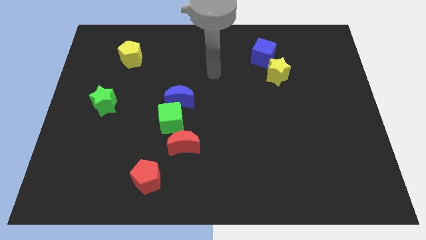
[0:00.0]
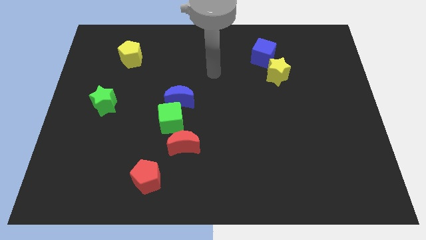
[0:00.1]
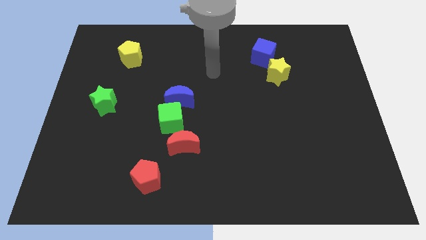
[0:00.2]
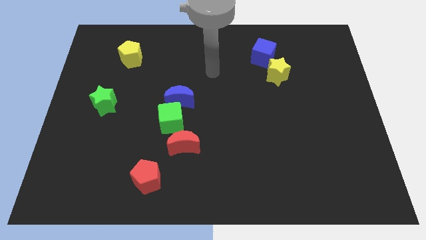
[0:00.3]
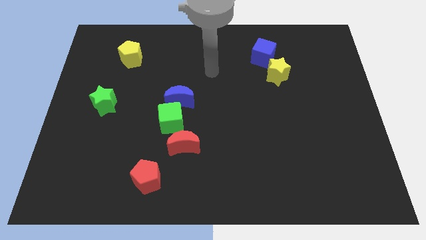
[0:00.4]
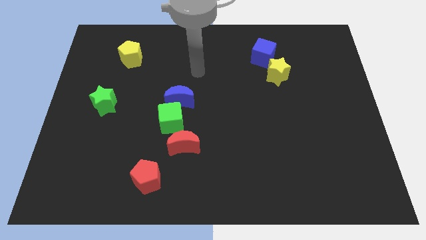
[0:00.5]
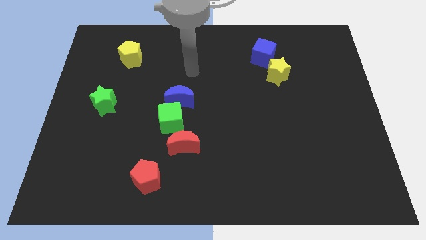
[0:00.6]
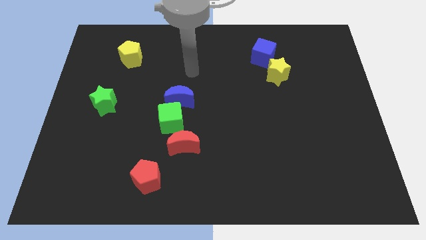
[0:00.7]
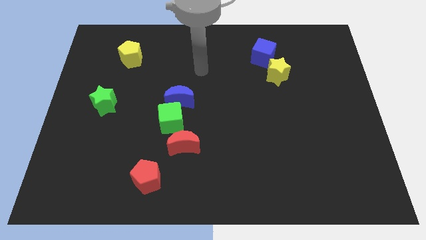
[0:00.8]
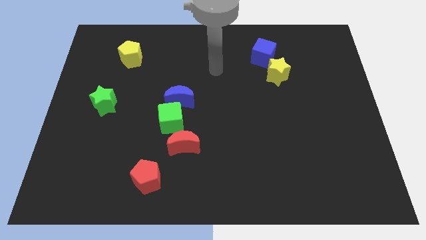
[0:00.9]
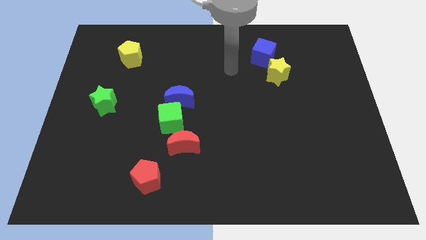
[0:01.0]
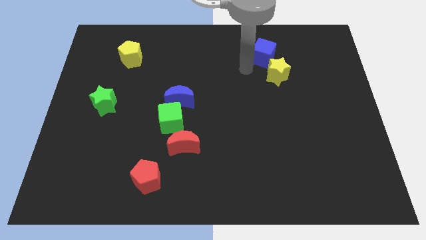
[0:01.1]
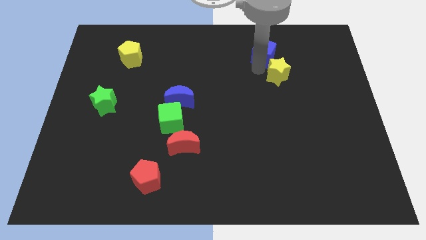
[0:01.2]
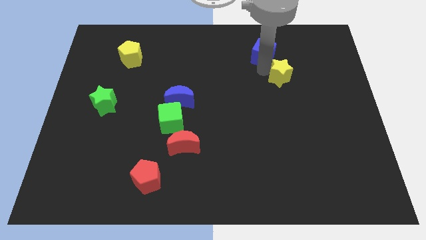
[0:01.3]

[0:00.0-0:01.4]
tap the yellow star

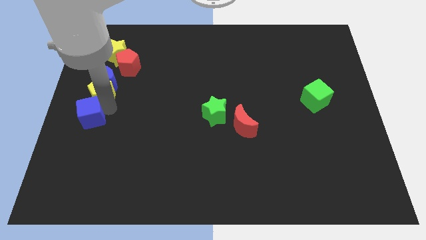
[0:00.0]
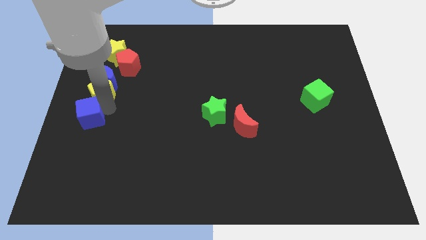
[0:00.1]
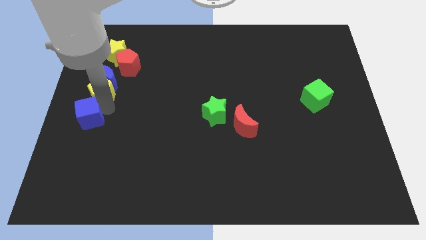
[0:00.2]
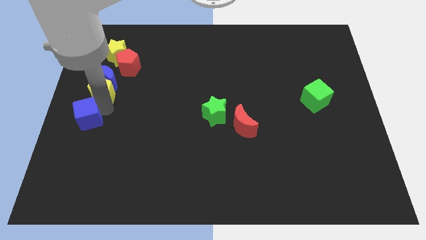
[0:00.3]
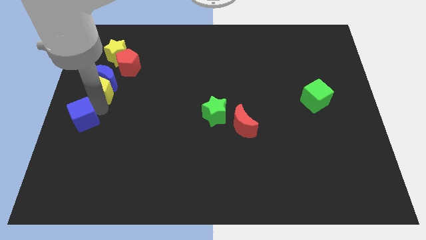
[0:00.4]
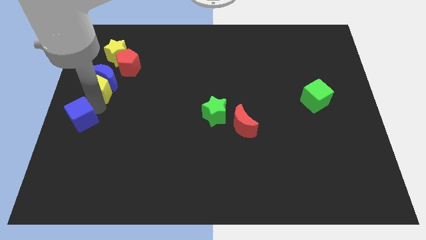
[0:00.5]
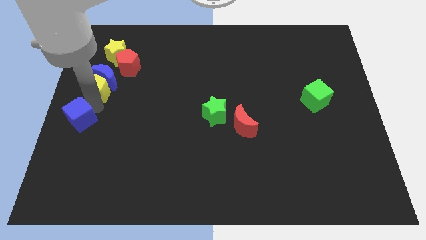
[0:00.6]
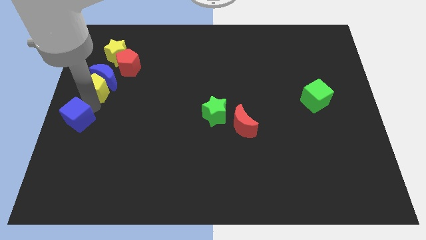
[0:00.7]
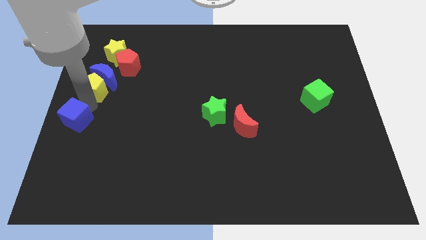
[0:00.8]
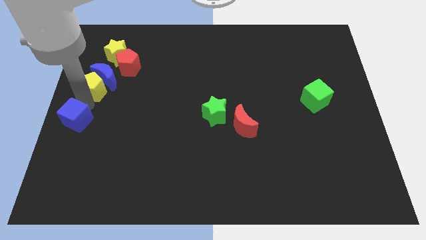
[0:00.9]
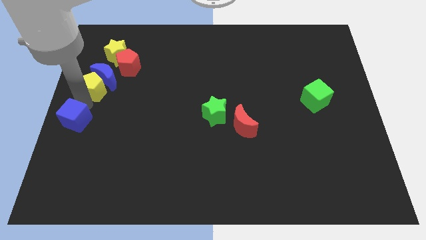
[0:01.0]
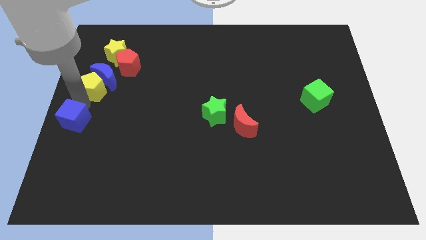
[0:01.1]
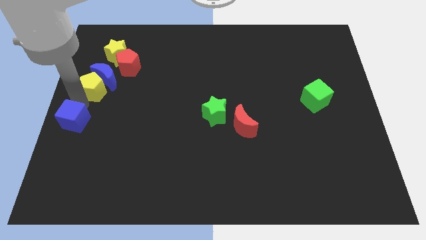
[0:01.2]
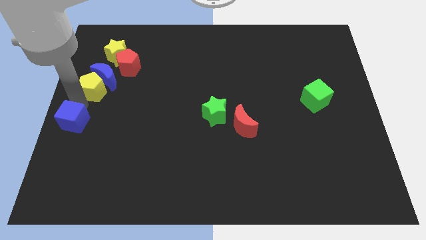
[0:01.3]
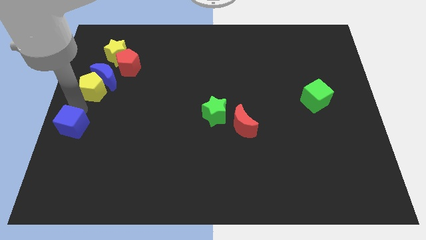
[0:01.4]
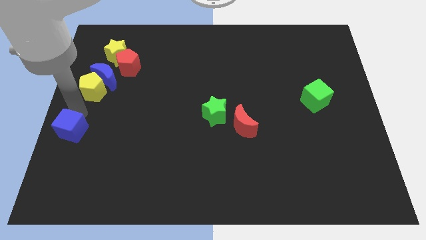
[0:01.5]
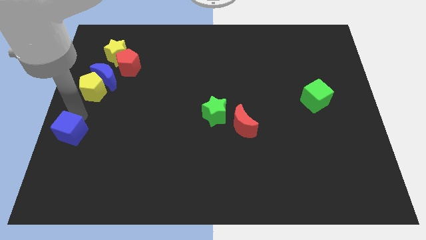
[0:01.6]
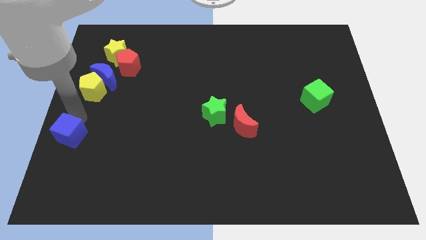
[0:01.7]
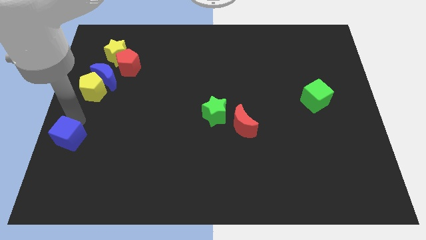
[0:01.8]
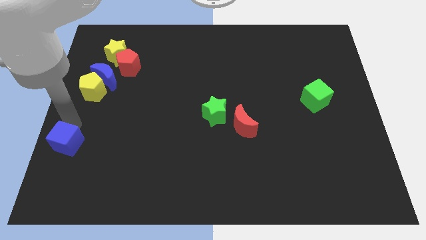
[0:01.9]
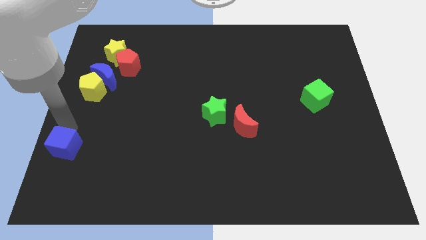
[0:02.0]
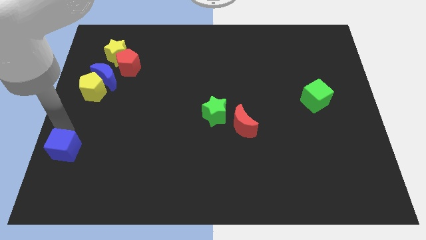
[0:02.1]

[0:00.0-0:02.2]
take the blue cube away from the yellow pentagon

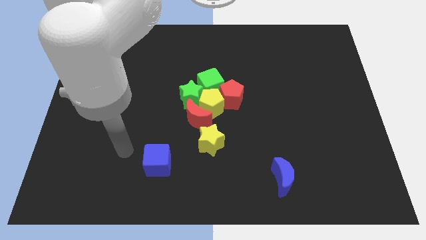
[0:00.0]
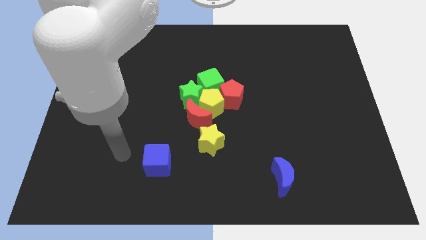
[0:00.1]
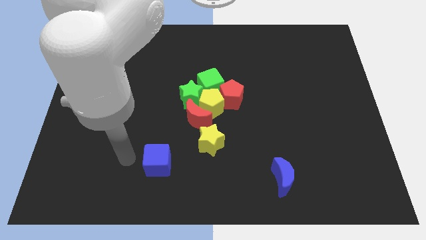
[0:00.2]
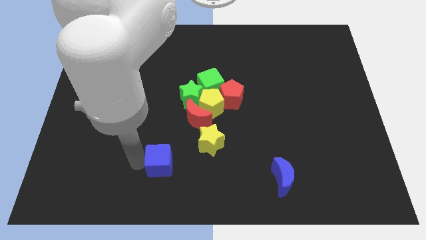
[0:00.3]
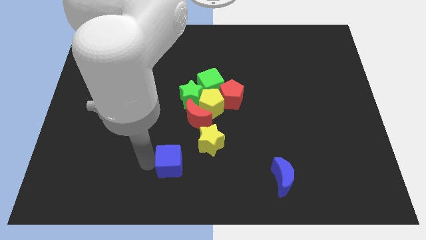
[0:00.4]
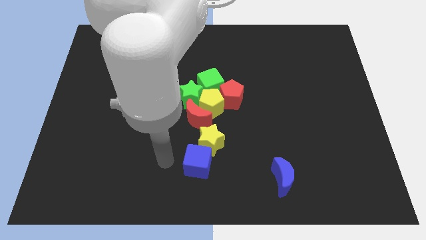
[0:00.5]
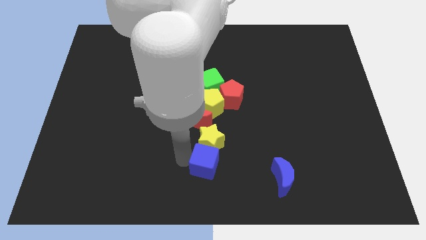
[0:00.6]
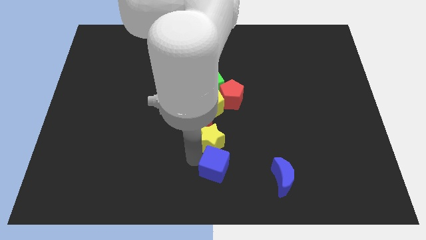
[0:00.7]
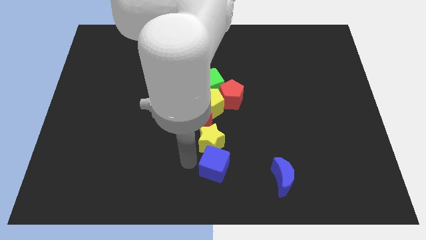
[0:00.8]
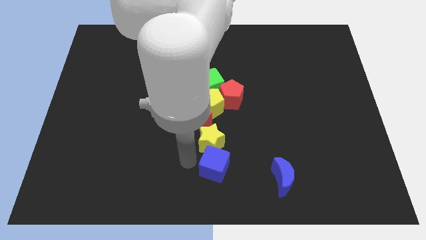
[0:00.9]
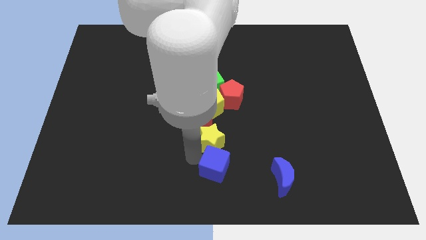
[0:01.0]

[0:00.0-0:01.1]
move the blue cube to the bottom of the yellow star

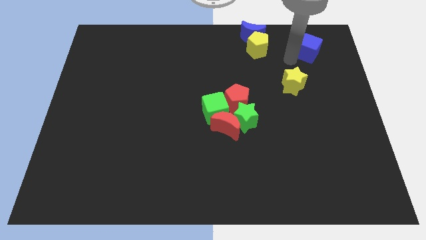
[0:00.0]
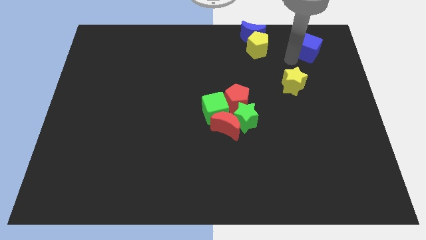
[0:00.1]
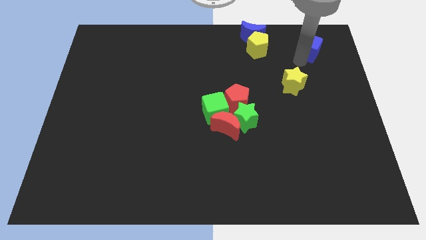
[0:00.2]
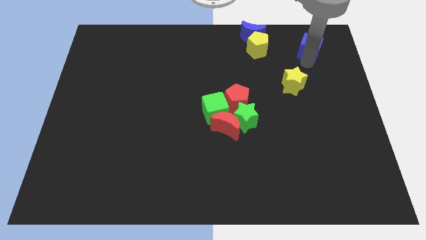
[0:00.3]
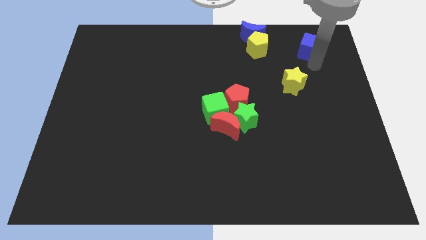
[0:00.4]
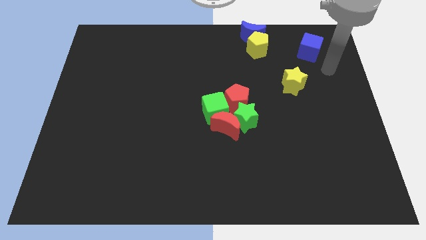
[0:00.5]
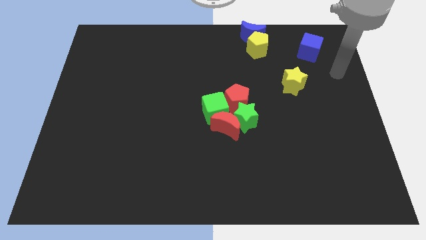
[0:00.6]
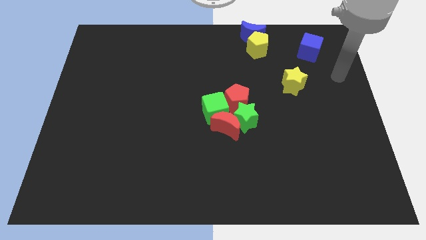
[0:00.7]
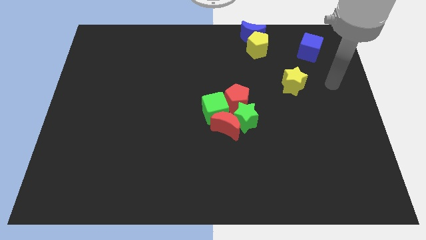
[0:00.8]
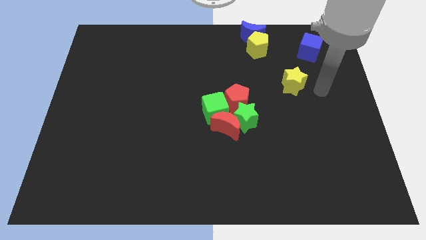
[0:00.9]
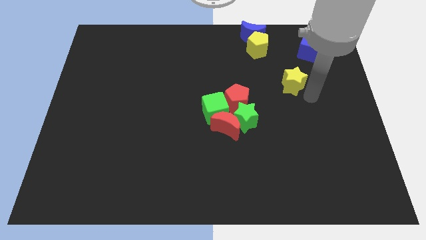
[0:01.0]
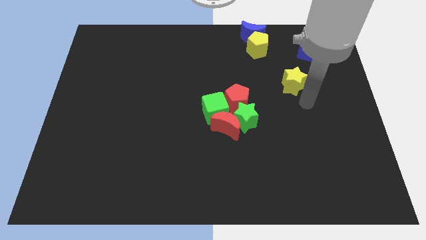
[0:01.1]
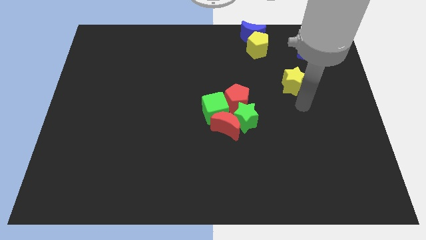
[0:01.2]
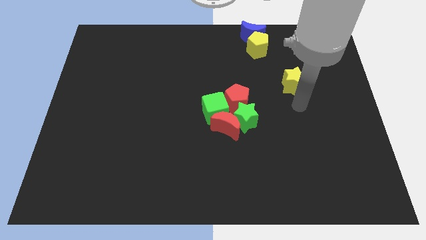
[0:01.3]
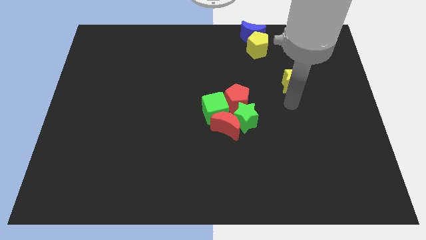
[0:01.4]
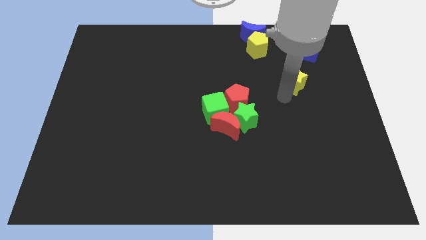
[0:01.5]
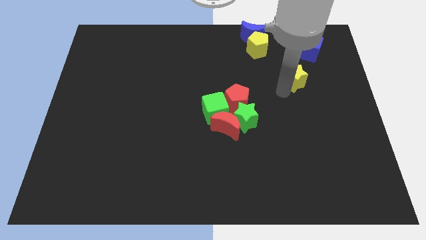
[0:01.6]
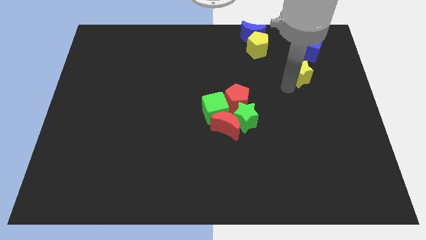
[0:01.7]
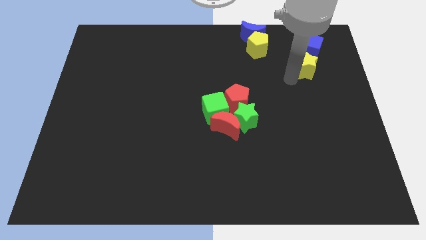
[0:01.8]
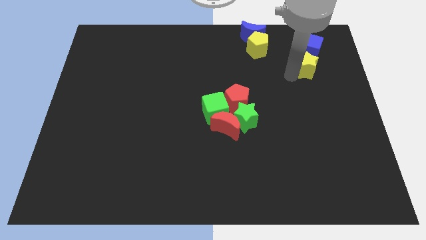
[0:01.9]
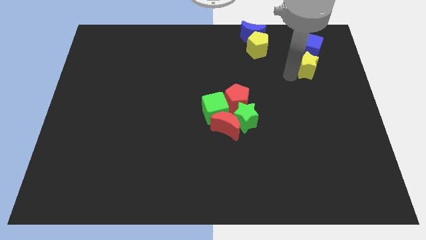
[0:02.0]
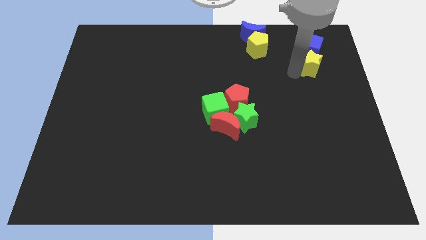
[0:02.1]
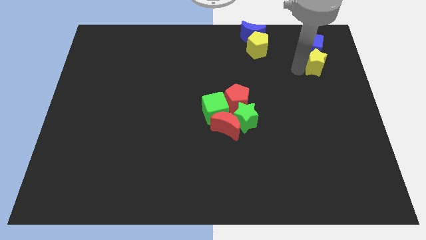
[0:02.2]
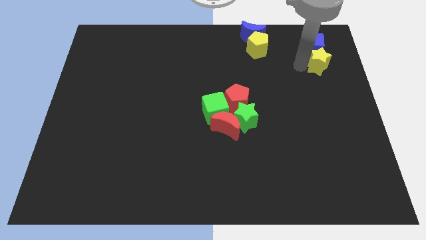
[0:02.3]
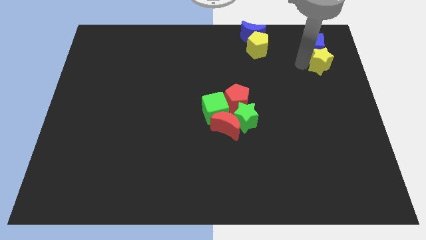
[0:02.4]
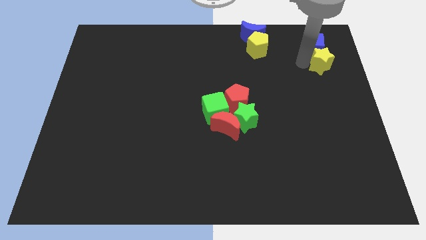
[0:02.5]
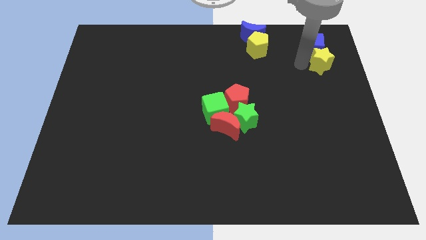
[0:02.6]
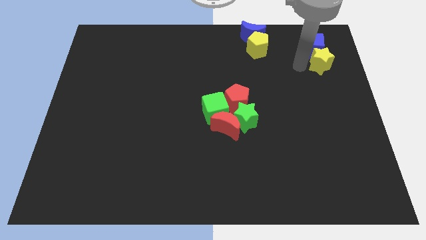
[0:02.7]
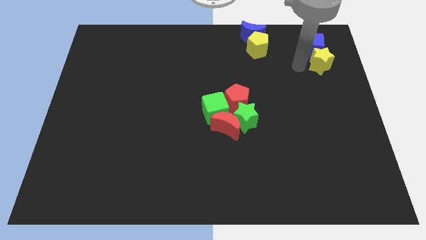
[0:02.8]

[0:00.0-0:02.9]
push yellow star below blue cube

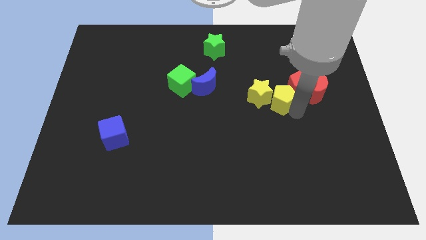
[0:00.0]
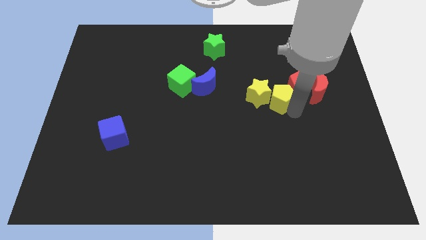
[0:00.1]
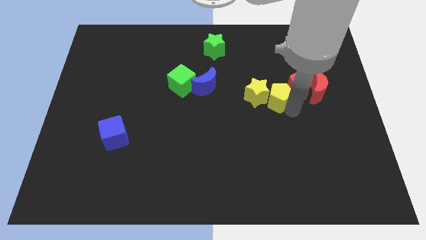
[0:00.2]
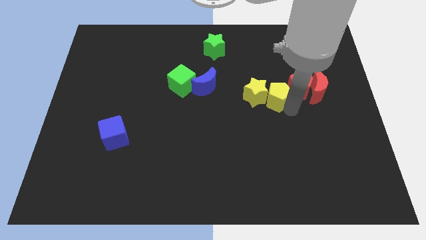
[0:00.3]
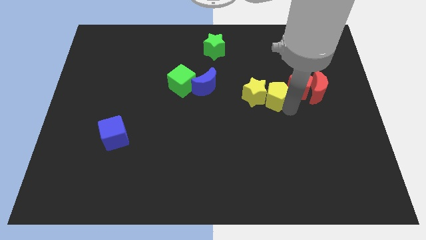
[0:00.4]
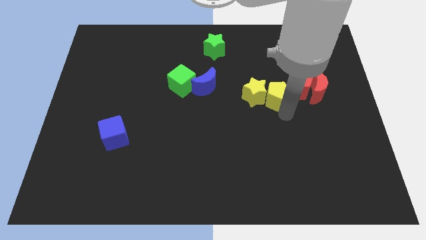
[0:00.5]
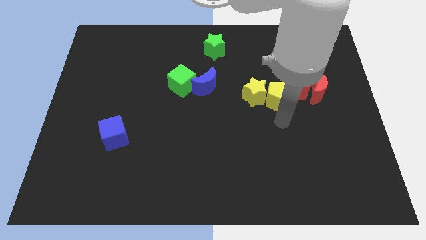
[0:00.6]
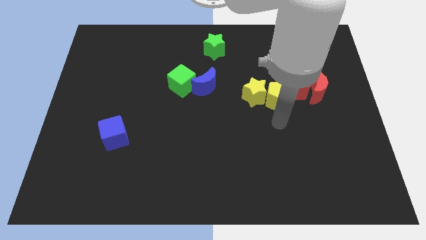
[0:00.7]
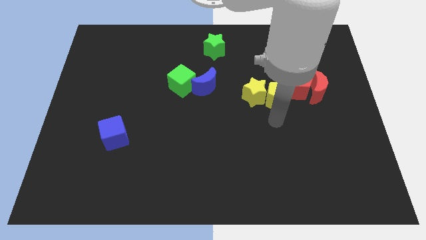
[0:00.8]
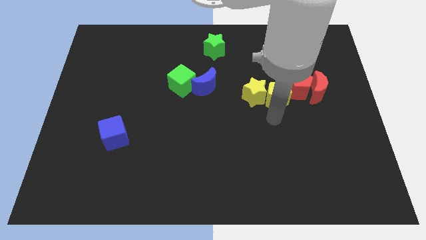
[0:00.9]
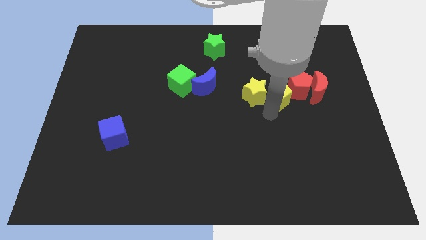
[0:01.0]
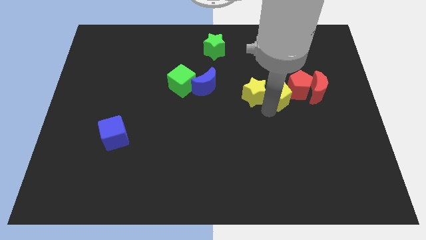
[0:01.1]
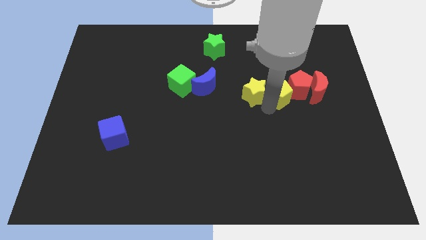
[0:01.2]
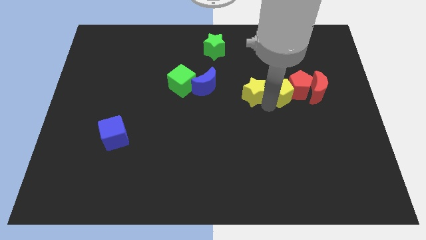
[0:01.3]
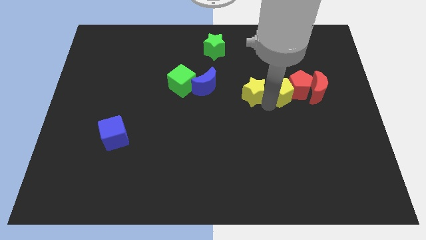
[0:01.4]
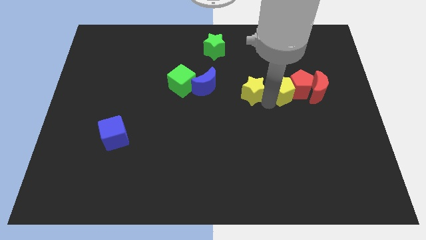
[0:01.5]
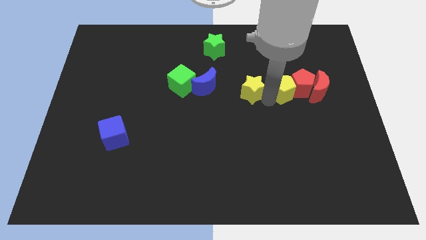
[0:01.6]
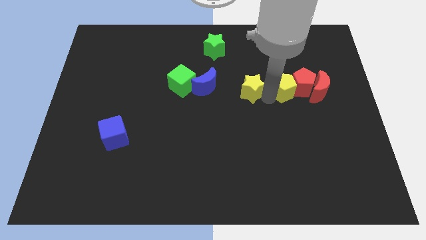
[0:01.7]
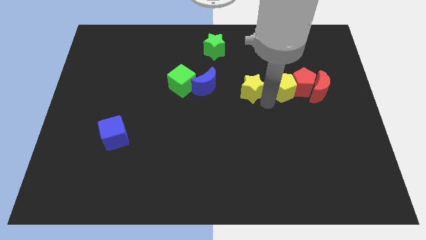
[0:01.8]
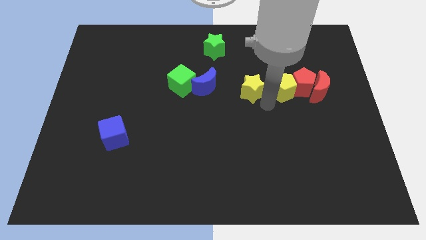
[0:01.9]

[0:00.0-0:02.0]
put your hand in between the yellow blocks
